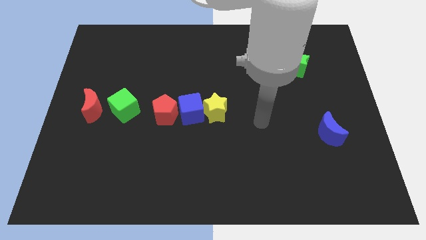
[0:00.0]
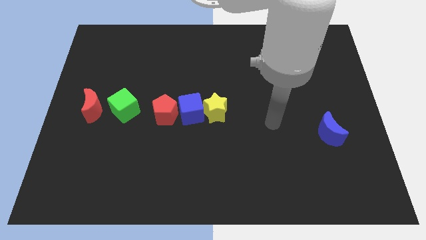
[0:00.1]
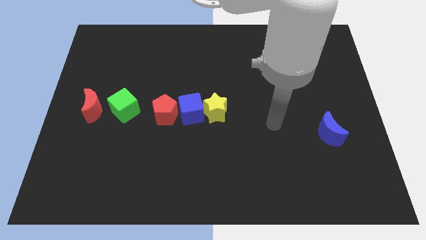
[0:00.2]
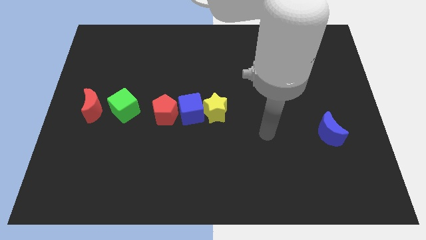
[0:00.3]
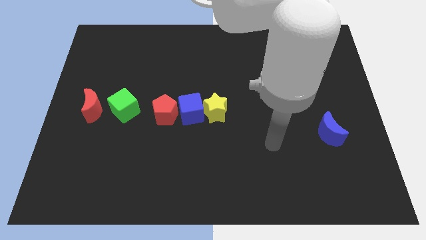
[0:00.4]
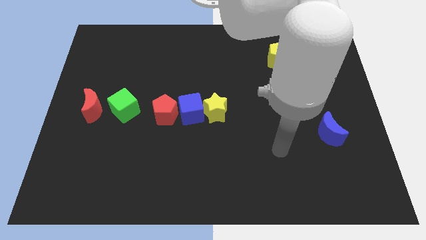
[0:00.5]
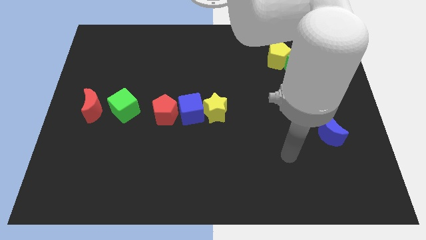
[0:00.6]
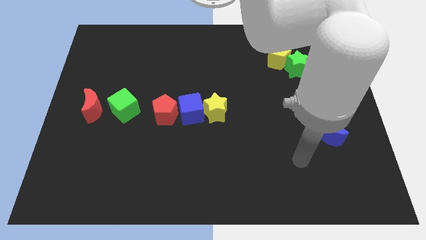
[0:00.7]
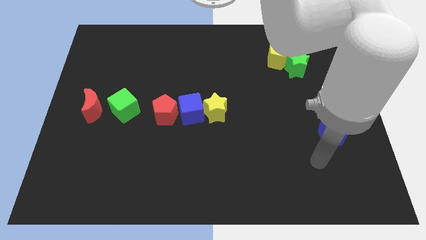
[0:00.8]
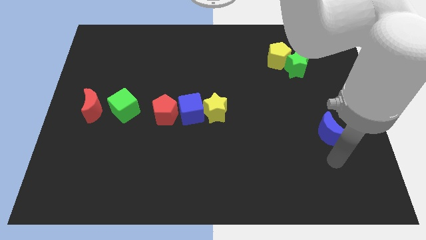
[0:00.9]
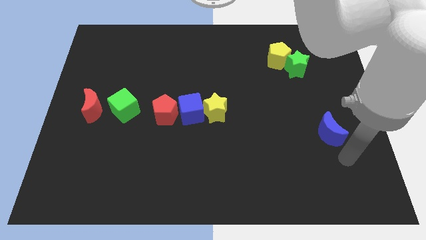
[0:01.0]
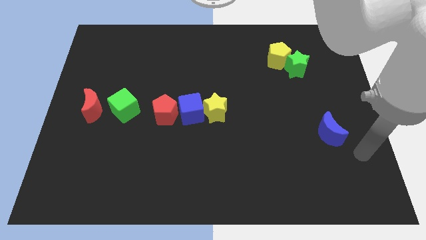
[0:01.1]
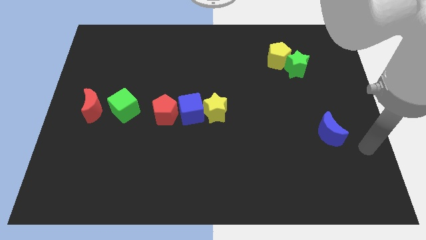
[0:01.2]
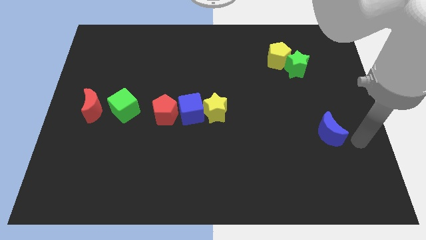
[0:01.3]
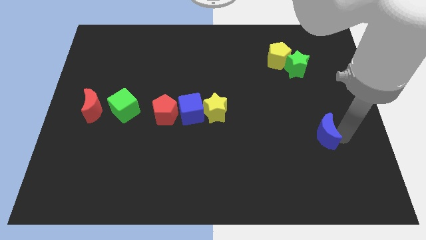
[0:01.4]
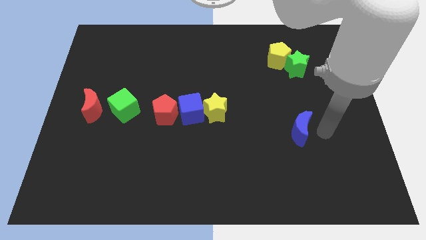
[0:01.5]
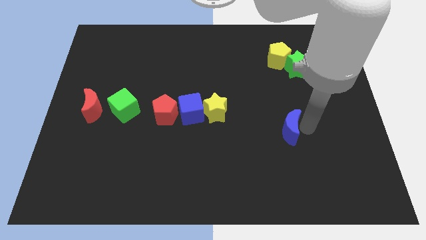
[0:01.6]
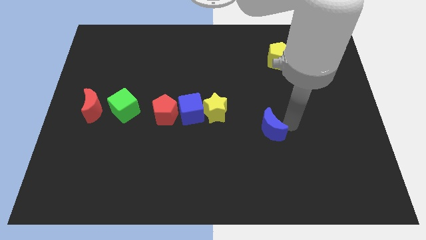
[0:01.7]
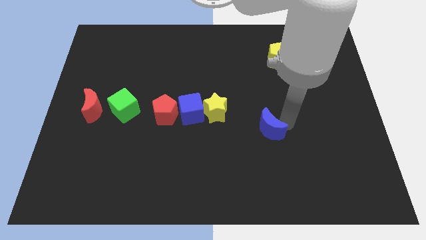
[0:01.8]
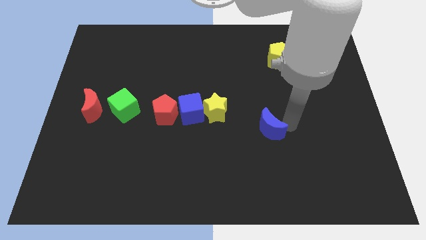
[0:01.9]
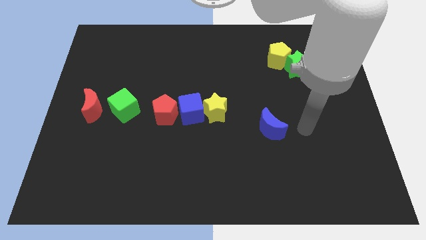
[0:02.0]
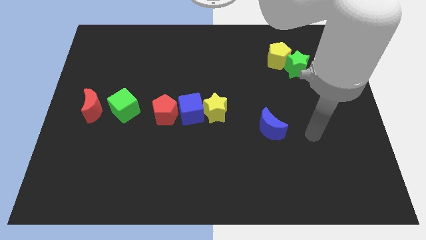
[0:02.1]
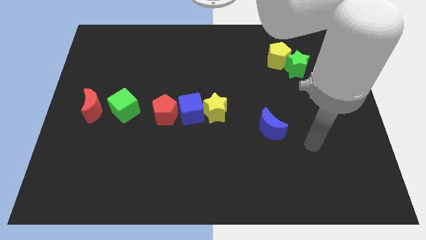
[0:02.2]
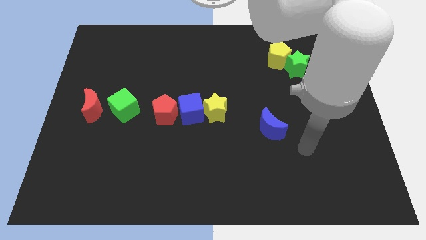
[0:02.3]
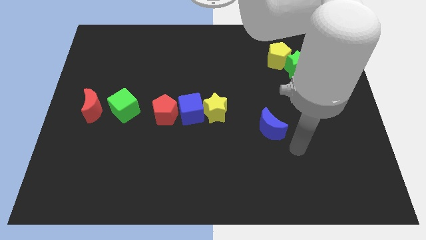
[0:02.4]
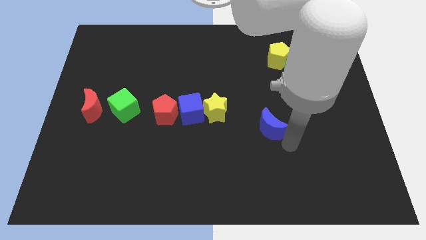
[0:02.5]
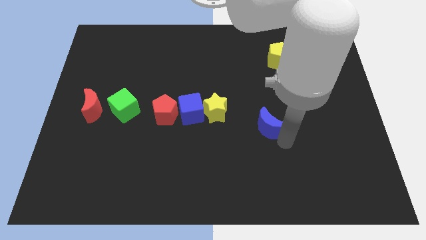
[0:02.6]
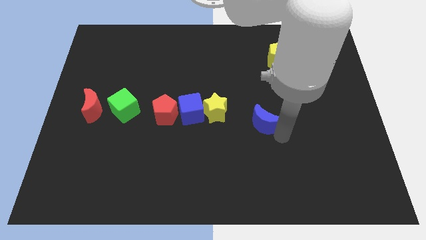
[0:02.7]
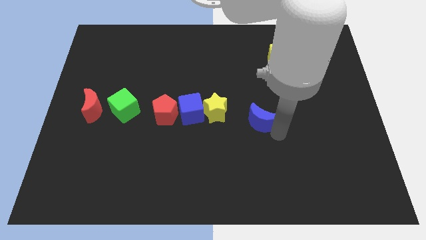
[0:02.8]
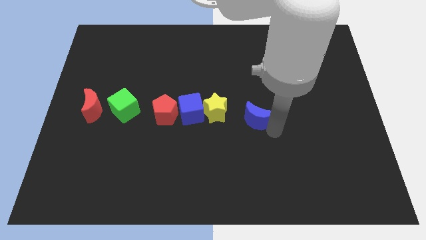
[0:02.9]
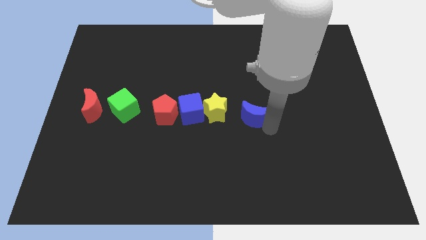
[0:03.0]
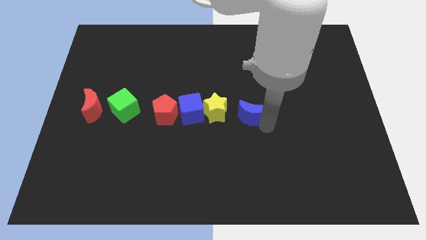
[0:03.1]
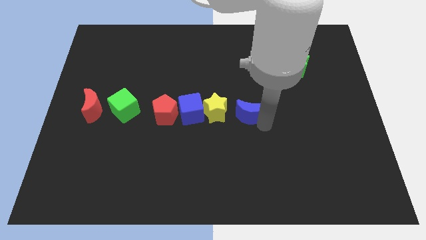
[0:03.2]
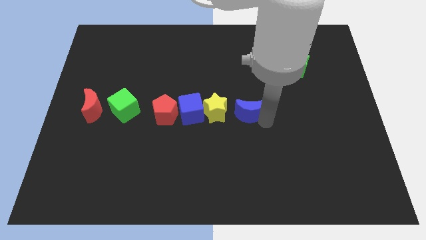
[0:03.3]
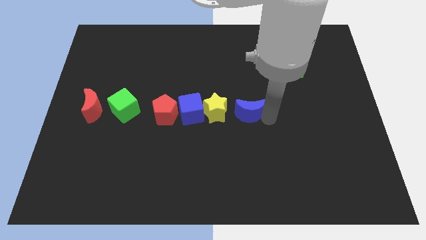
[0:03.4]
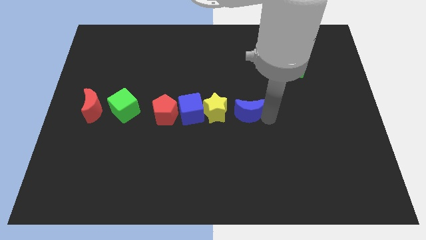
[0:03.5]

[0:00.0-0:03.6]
move the blue crescent to the bottom left of the green star

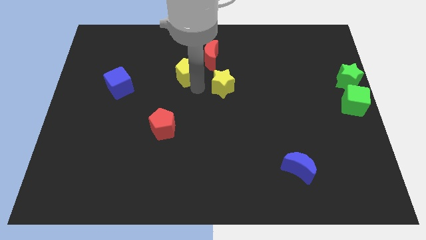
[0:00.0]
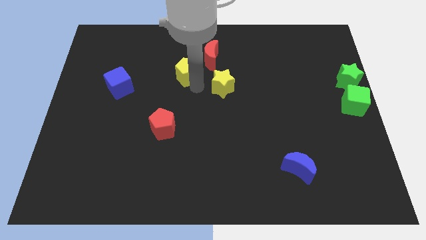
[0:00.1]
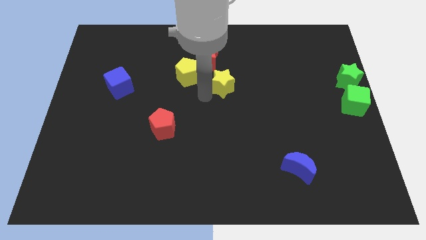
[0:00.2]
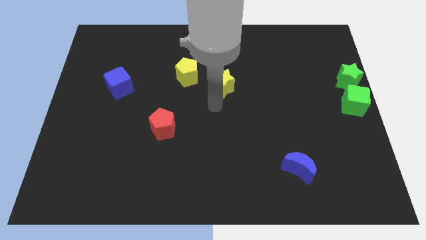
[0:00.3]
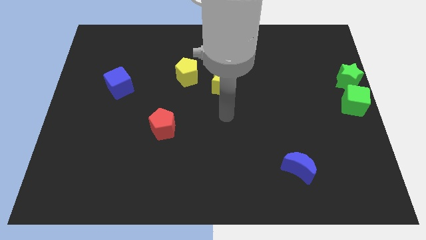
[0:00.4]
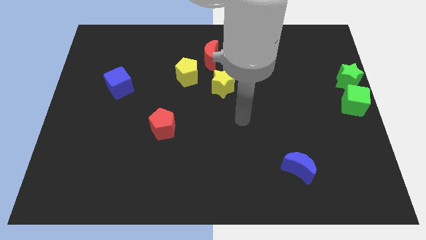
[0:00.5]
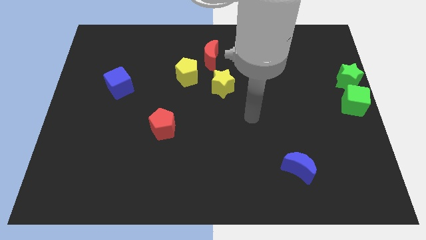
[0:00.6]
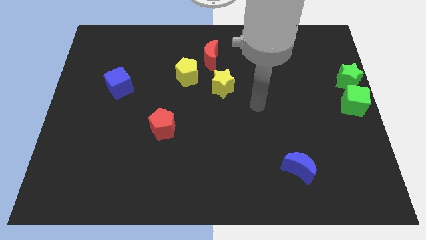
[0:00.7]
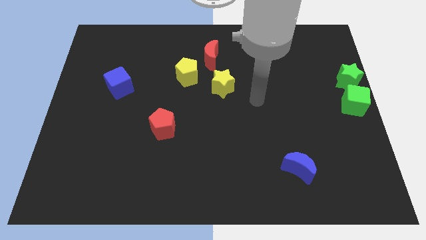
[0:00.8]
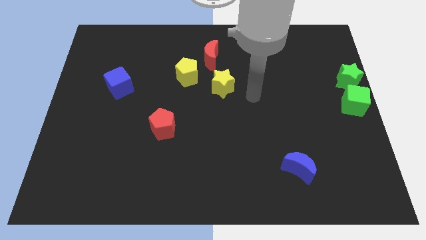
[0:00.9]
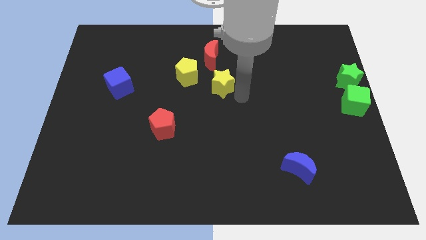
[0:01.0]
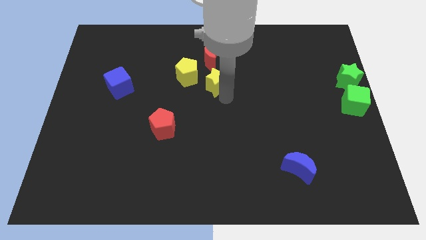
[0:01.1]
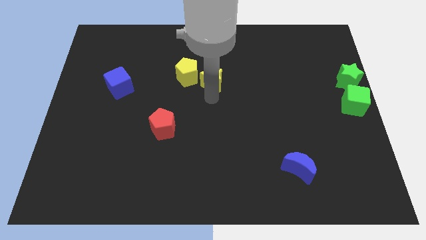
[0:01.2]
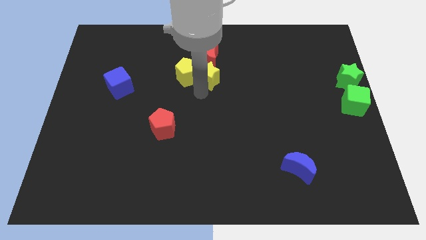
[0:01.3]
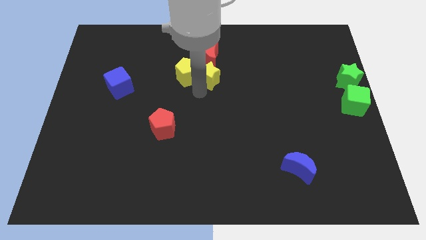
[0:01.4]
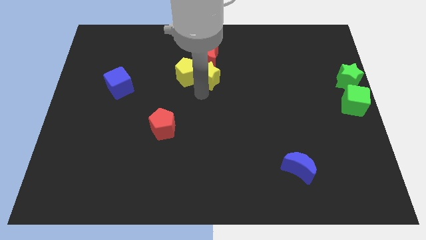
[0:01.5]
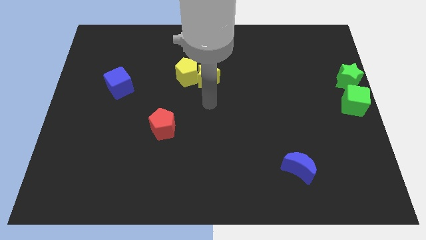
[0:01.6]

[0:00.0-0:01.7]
place the yellow star at the bottom of the red crescent

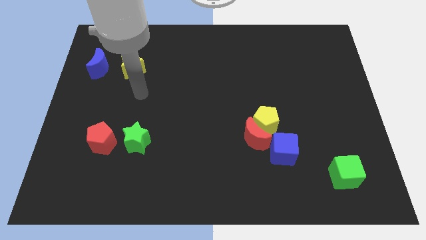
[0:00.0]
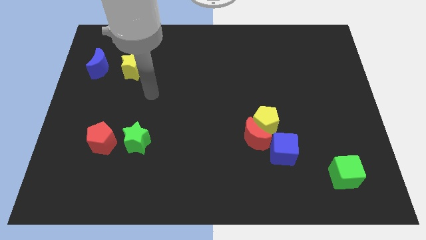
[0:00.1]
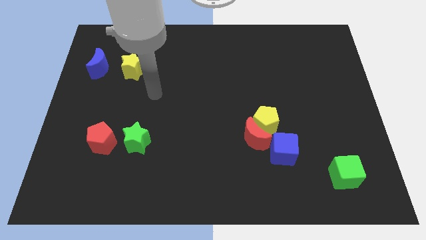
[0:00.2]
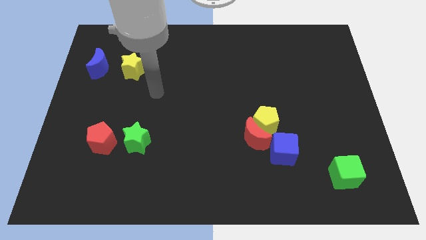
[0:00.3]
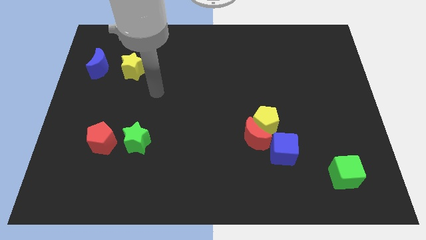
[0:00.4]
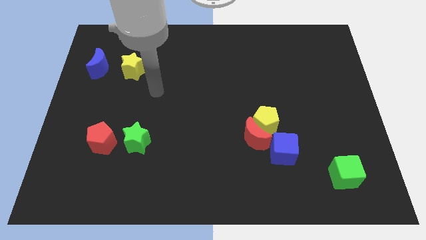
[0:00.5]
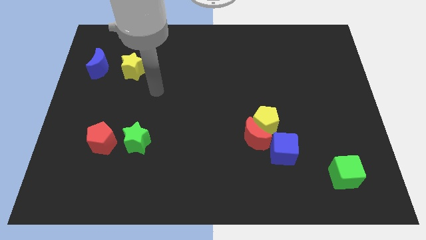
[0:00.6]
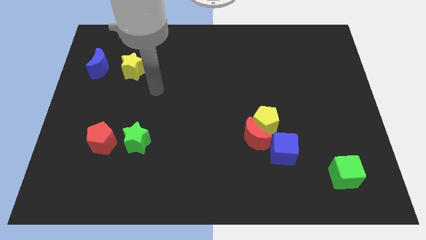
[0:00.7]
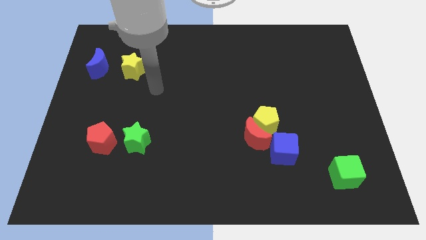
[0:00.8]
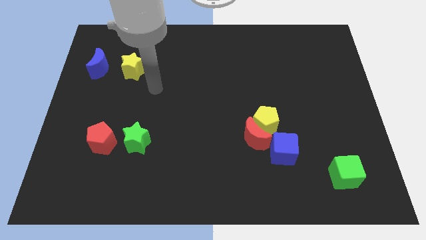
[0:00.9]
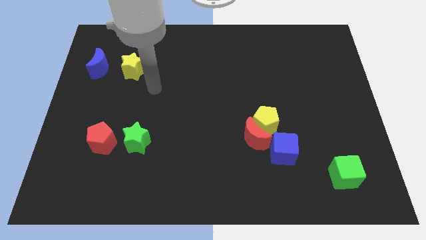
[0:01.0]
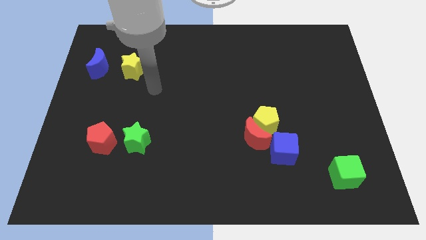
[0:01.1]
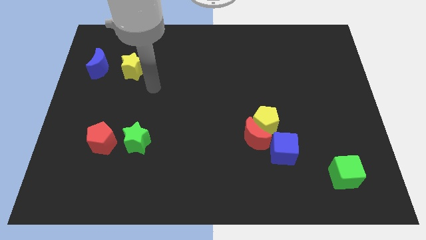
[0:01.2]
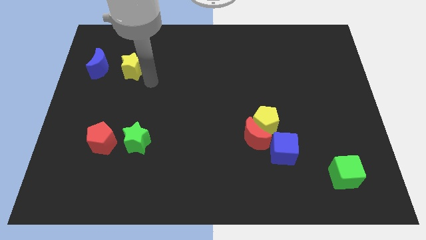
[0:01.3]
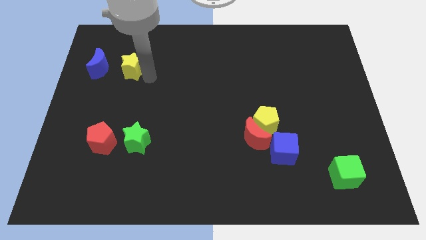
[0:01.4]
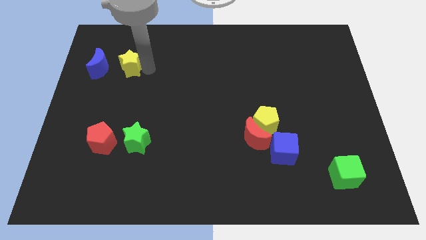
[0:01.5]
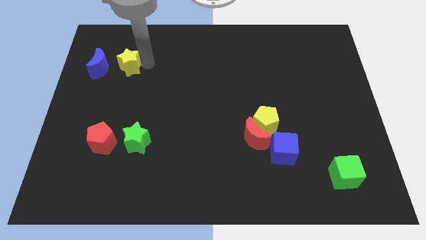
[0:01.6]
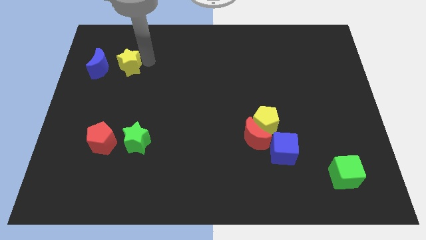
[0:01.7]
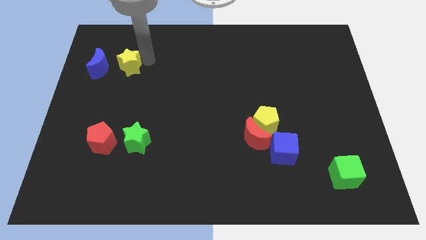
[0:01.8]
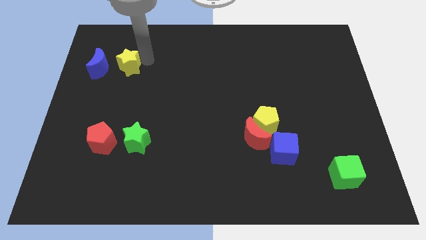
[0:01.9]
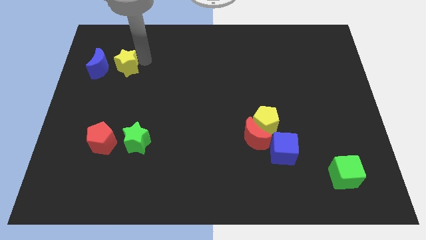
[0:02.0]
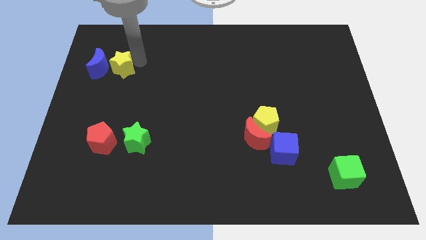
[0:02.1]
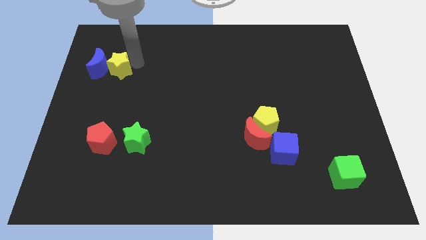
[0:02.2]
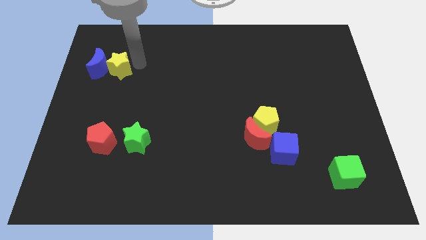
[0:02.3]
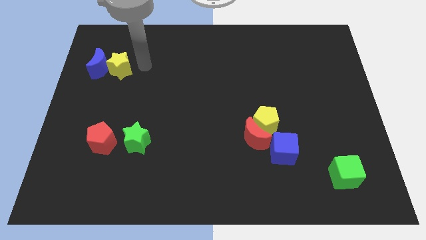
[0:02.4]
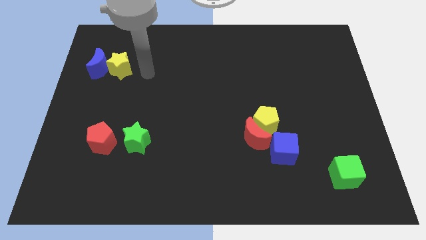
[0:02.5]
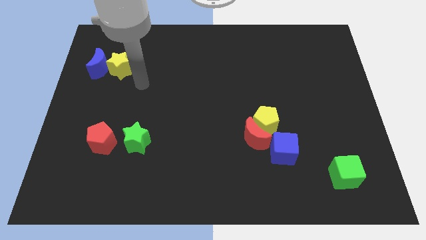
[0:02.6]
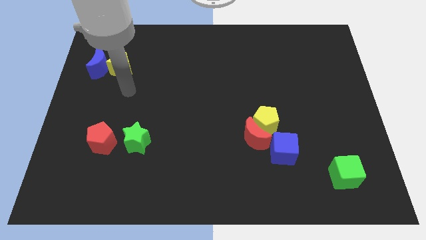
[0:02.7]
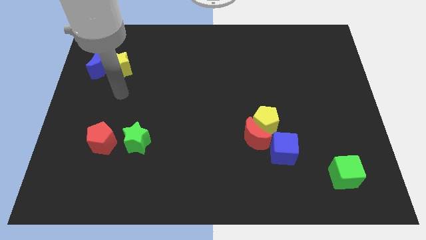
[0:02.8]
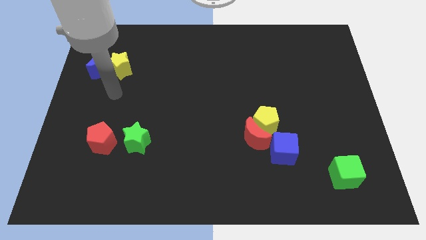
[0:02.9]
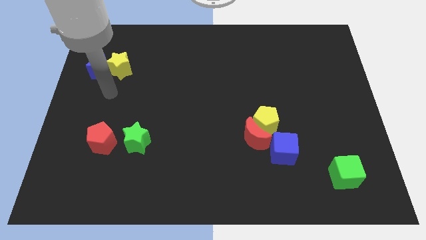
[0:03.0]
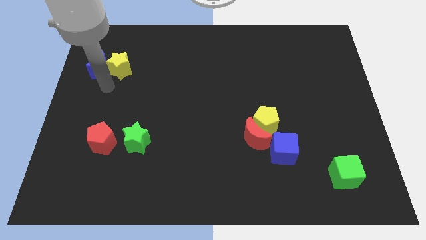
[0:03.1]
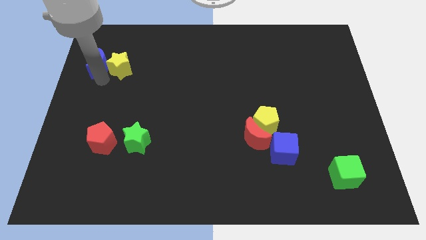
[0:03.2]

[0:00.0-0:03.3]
push yellow star in to blue crescent

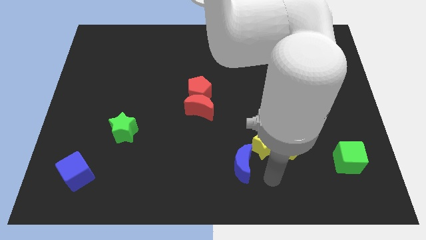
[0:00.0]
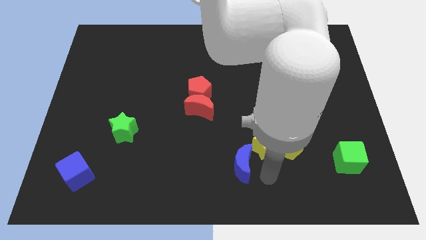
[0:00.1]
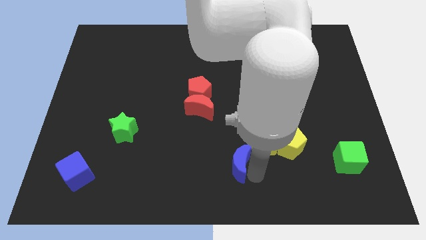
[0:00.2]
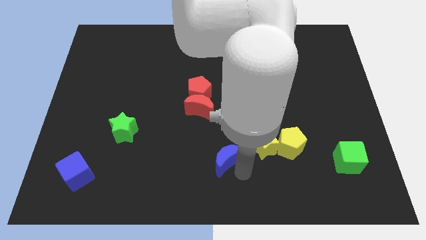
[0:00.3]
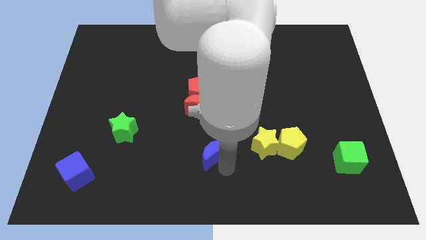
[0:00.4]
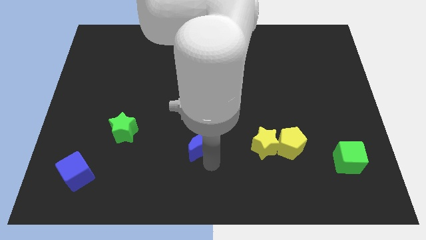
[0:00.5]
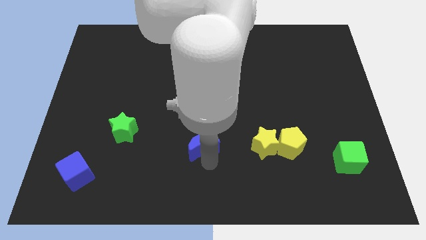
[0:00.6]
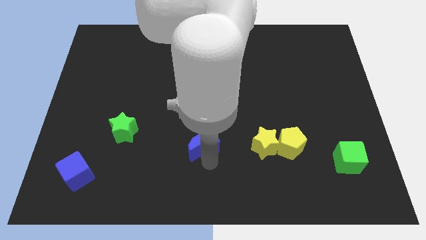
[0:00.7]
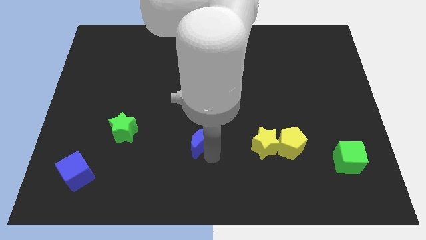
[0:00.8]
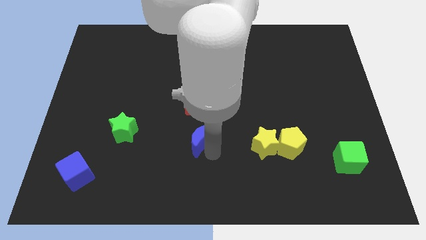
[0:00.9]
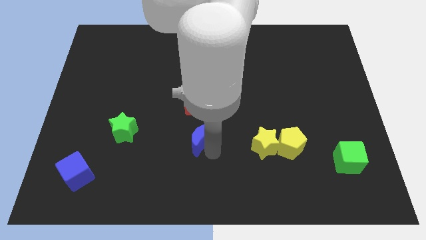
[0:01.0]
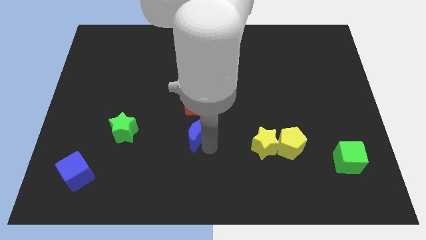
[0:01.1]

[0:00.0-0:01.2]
move the blue crescent towards the center of the board
